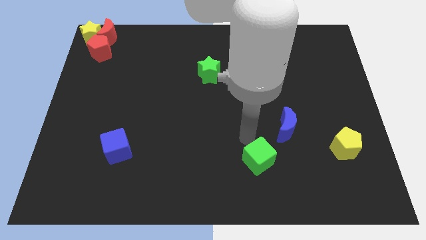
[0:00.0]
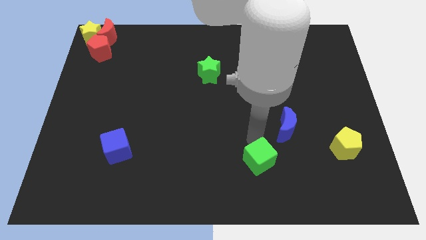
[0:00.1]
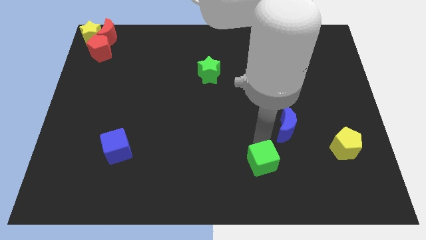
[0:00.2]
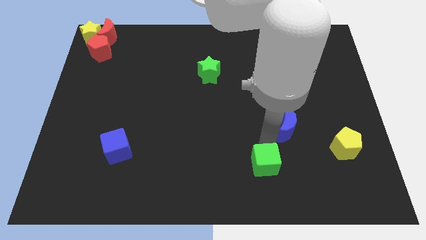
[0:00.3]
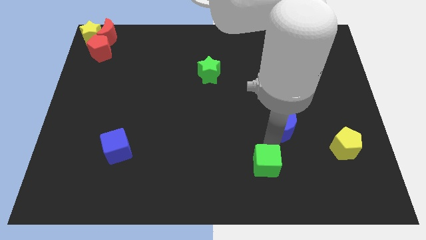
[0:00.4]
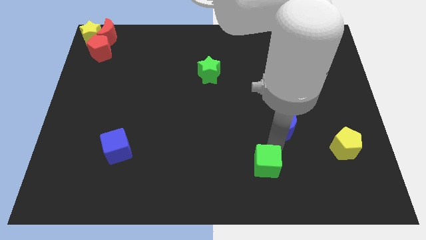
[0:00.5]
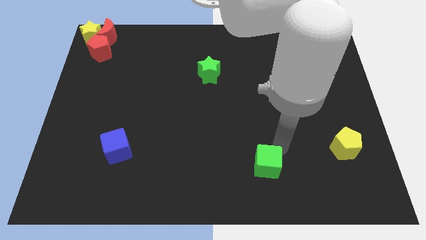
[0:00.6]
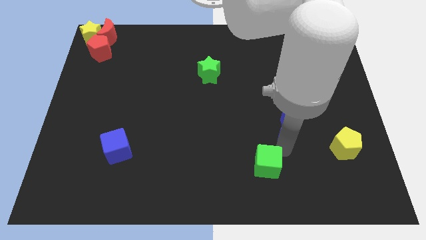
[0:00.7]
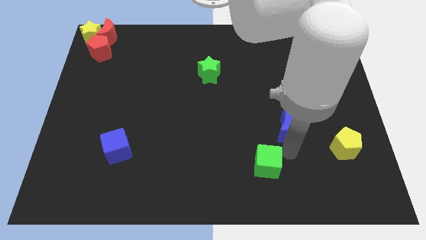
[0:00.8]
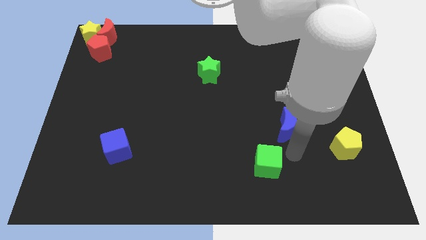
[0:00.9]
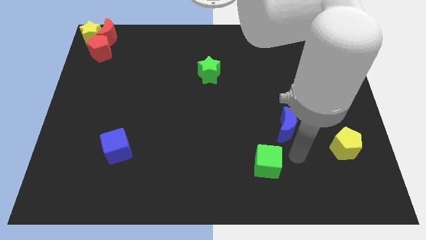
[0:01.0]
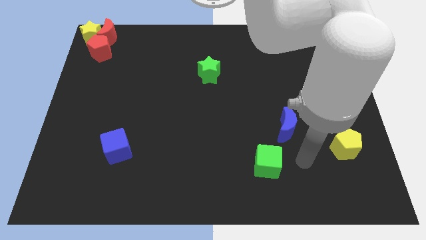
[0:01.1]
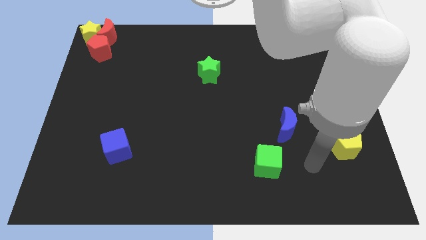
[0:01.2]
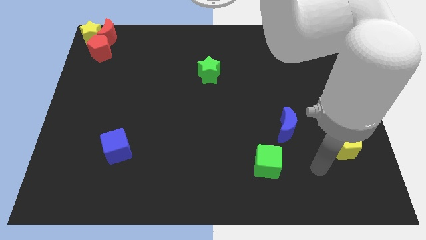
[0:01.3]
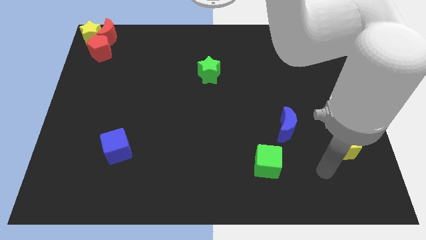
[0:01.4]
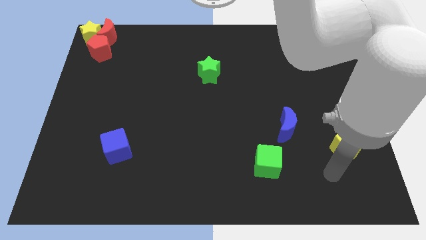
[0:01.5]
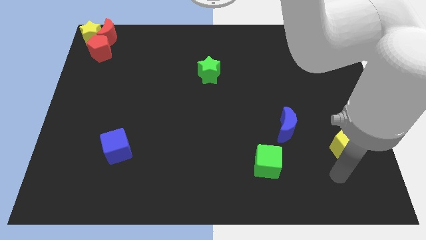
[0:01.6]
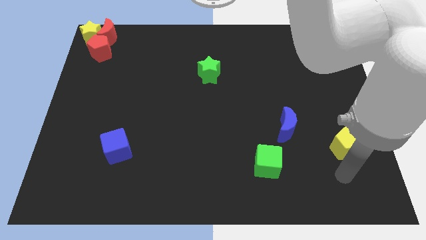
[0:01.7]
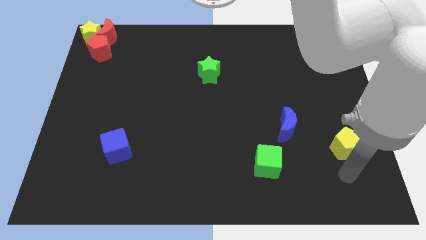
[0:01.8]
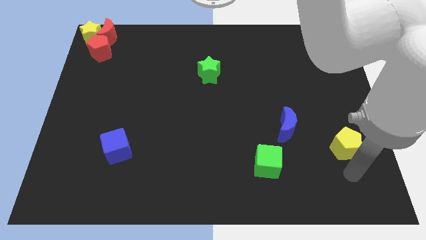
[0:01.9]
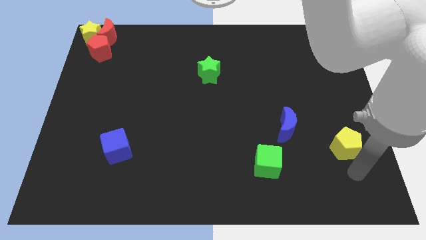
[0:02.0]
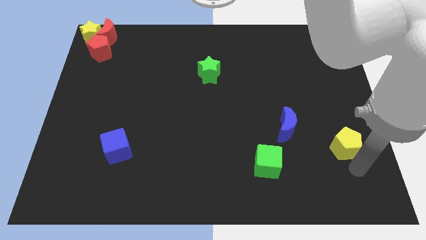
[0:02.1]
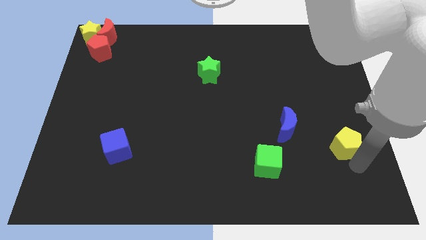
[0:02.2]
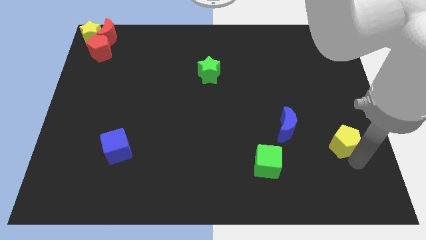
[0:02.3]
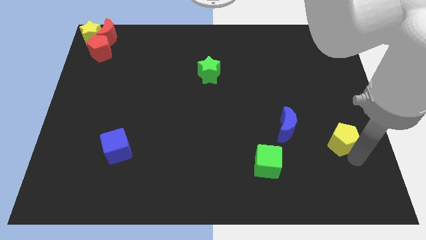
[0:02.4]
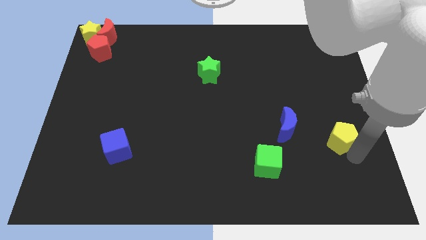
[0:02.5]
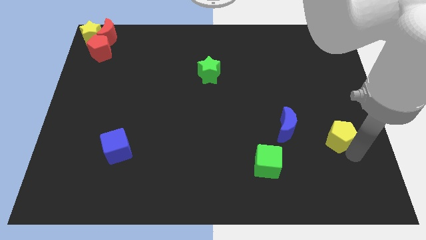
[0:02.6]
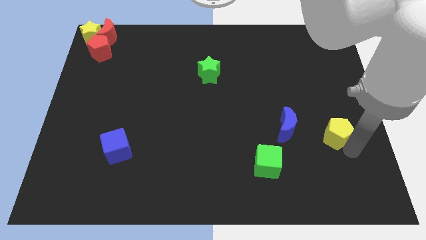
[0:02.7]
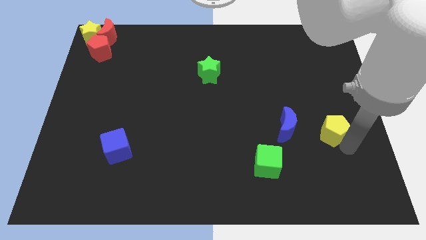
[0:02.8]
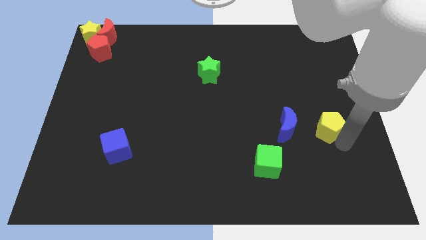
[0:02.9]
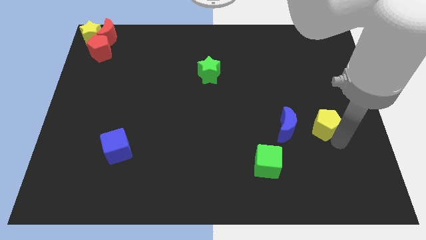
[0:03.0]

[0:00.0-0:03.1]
place the yellow pentagon to the right side of blue moon

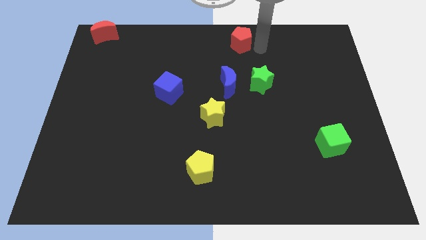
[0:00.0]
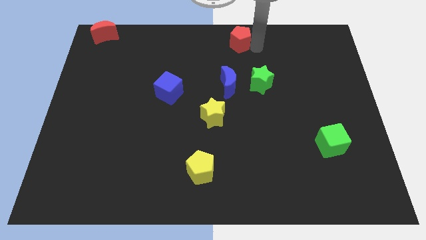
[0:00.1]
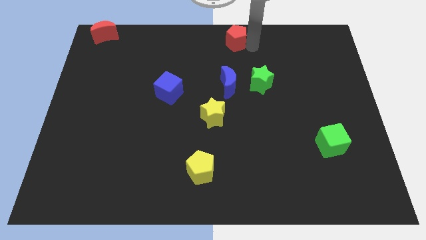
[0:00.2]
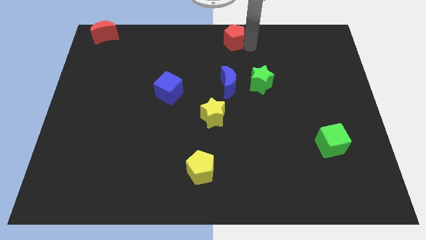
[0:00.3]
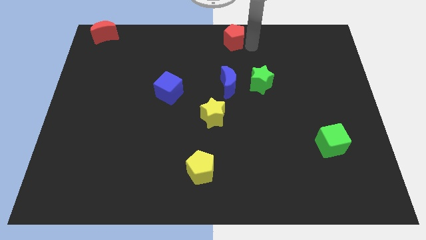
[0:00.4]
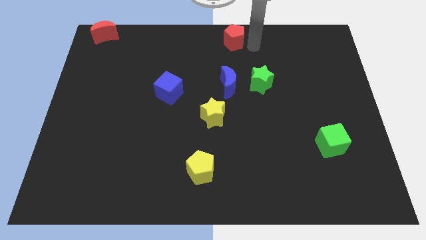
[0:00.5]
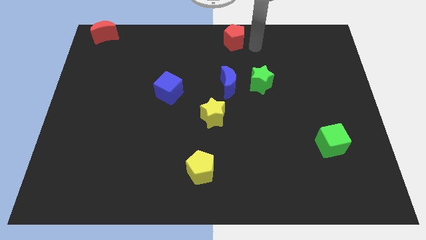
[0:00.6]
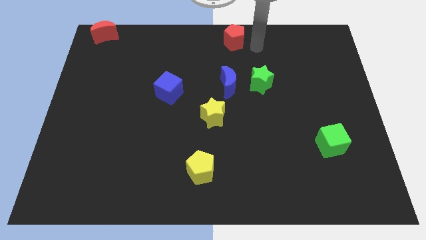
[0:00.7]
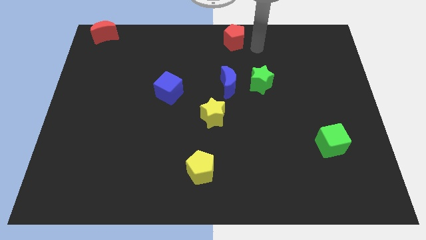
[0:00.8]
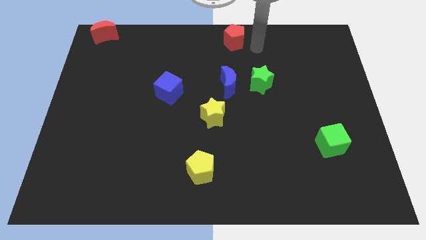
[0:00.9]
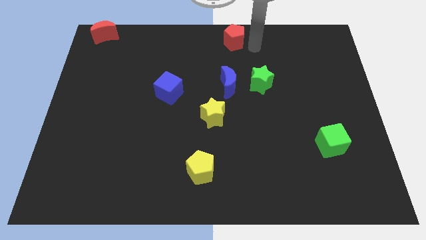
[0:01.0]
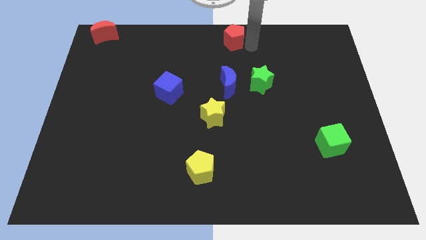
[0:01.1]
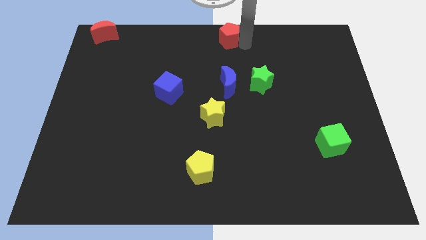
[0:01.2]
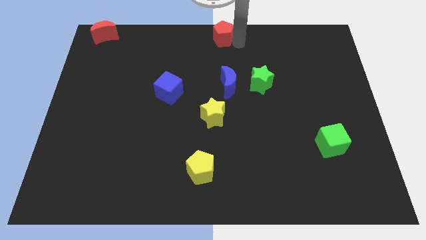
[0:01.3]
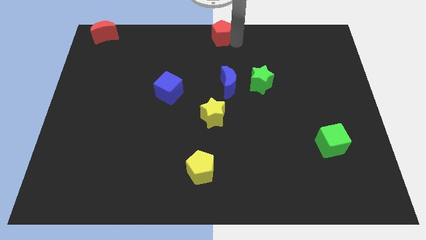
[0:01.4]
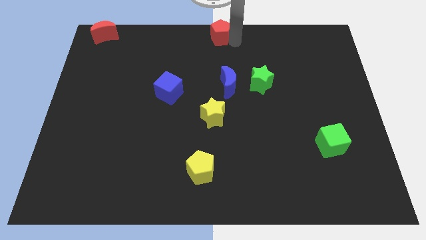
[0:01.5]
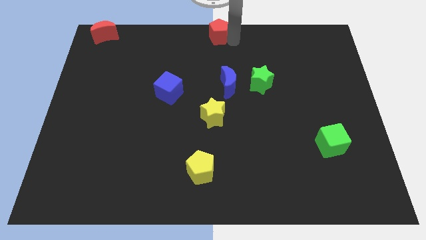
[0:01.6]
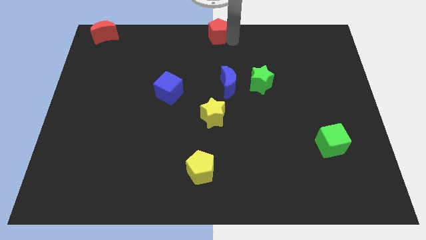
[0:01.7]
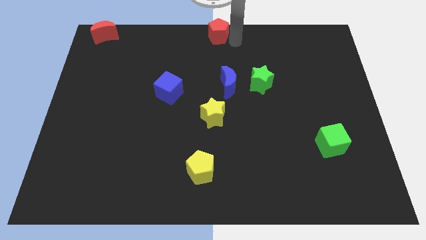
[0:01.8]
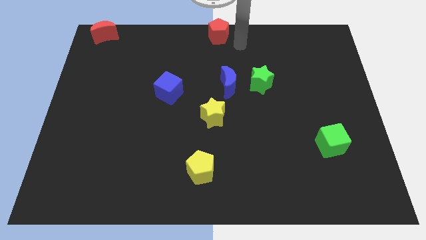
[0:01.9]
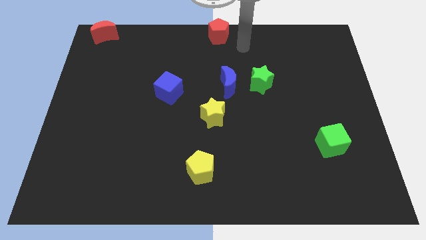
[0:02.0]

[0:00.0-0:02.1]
move the red pentagon slightly towards the left side of the board

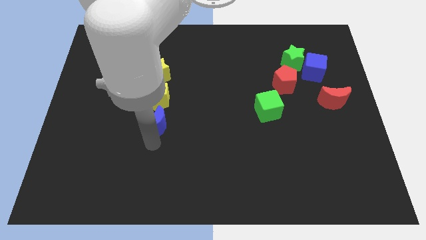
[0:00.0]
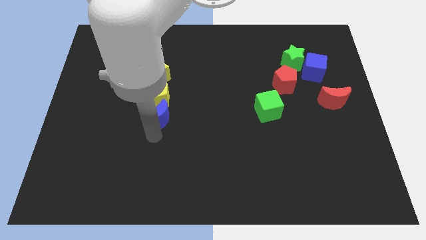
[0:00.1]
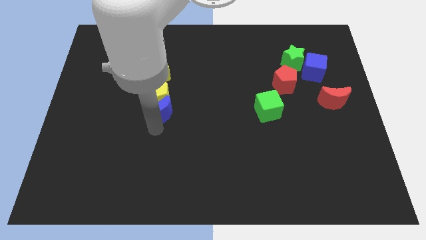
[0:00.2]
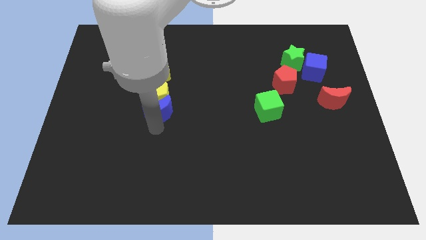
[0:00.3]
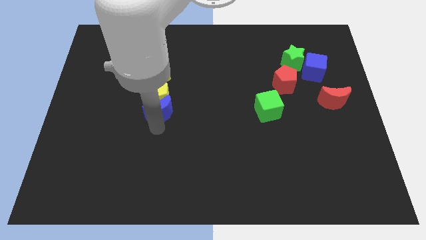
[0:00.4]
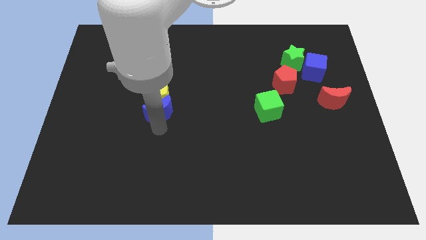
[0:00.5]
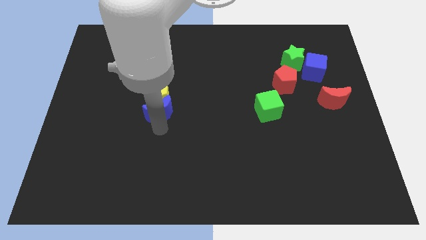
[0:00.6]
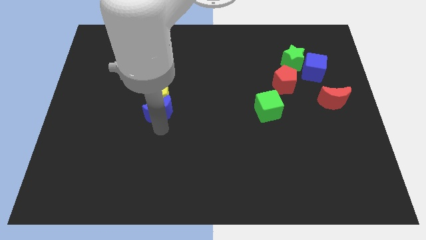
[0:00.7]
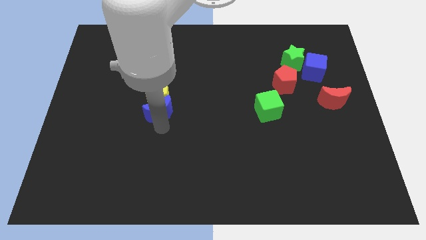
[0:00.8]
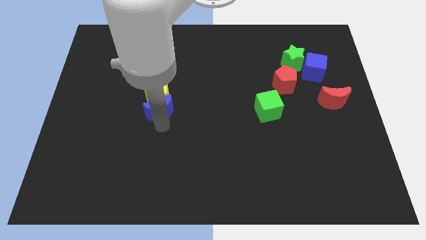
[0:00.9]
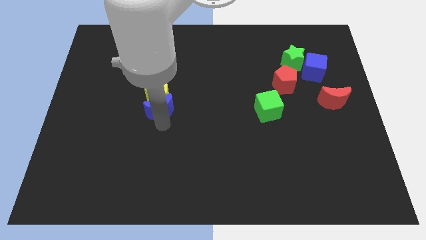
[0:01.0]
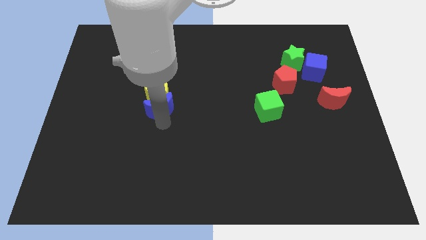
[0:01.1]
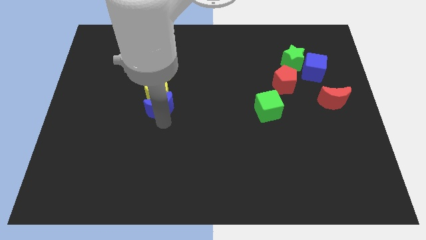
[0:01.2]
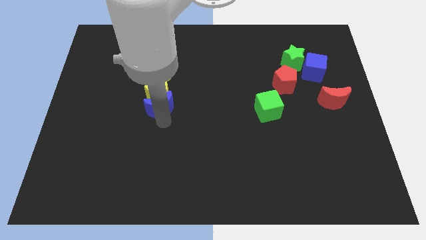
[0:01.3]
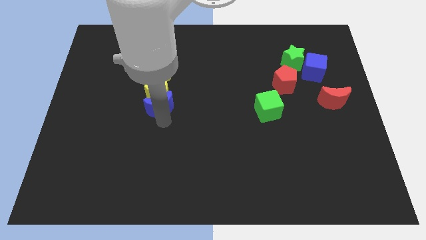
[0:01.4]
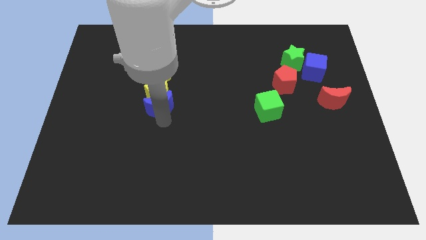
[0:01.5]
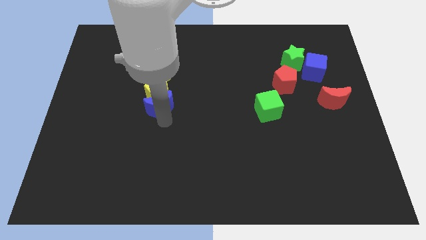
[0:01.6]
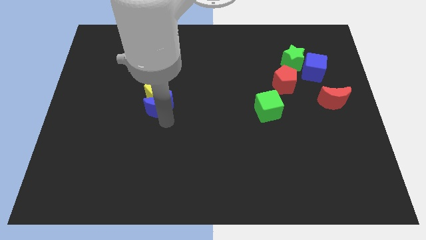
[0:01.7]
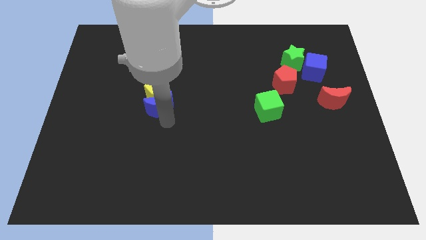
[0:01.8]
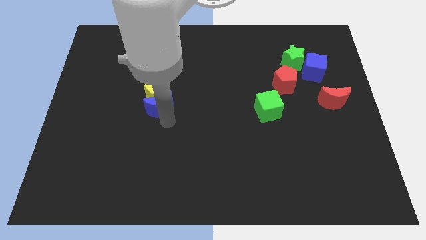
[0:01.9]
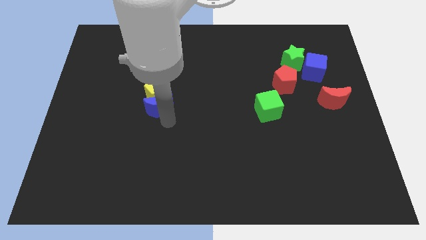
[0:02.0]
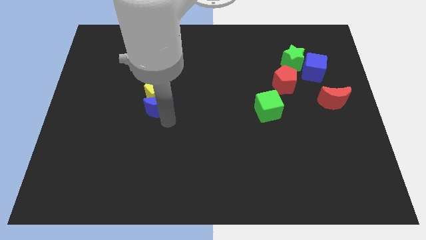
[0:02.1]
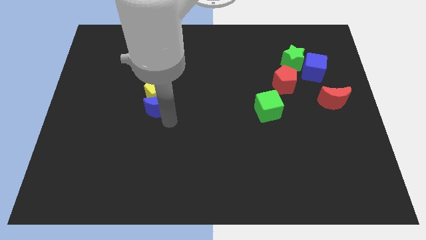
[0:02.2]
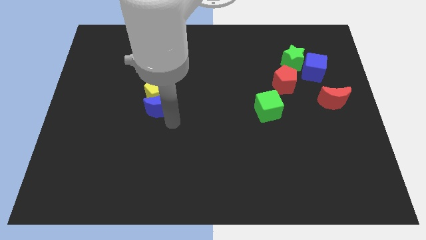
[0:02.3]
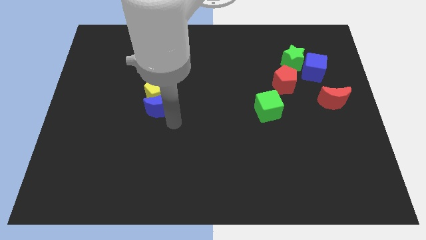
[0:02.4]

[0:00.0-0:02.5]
push the blue crescent towards the yellow pentagon

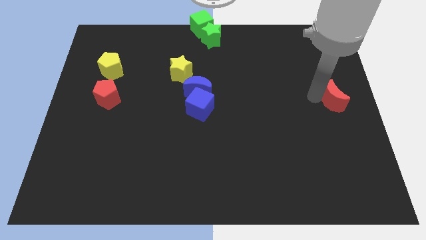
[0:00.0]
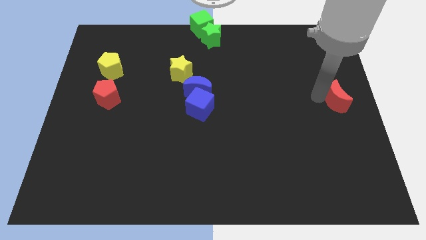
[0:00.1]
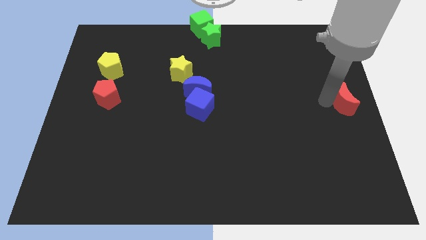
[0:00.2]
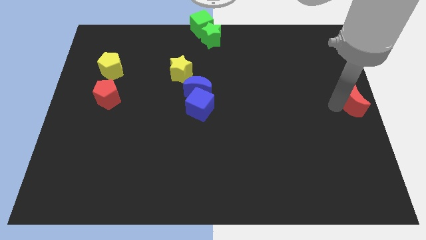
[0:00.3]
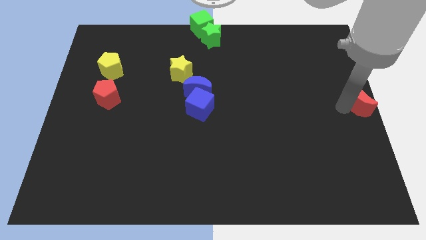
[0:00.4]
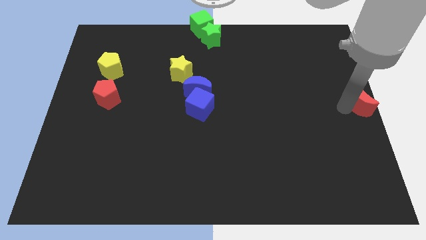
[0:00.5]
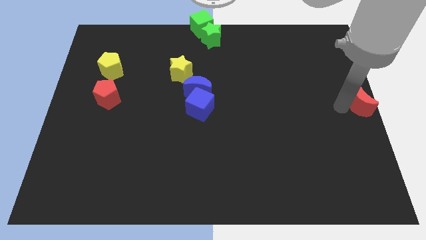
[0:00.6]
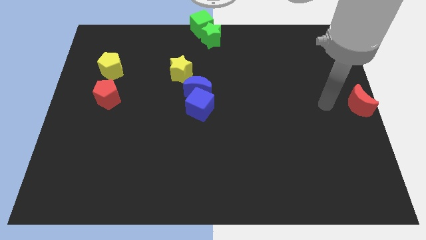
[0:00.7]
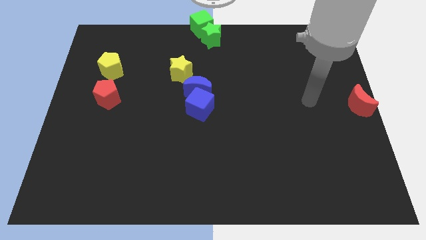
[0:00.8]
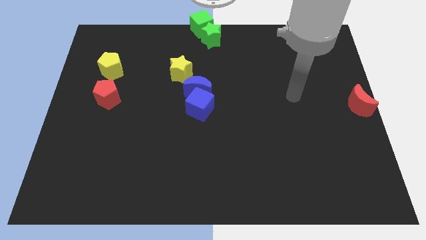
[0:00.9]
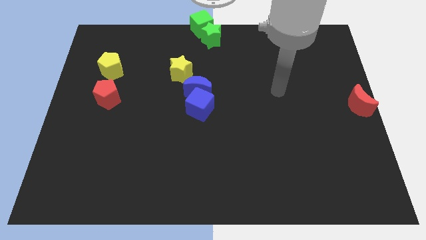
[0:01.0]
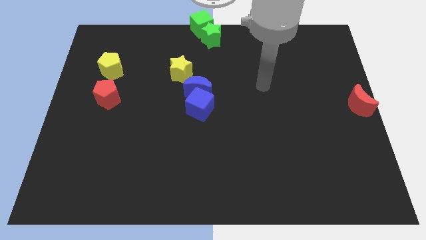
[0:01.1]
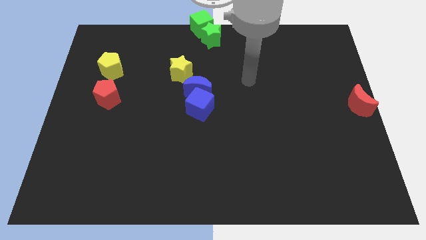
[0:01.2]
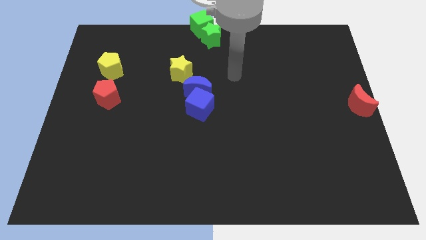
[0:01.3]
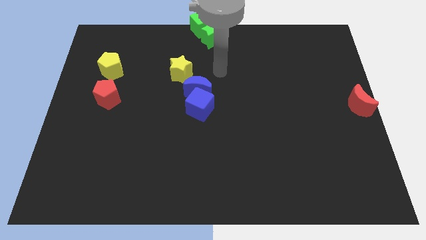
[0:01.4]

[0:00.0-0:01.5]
place the red crescent at the center right of the board
